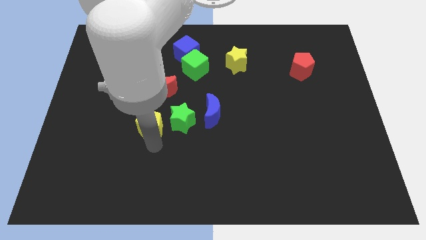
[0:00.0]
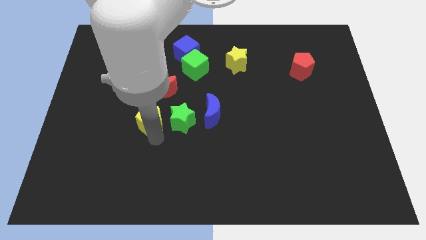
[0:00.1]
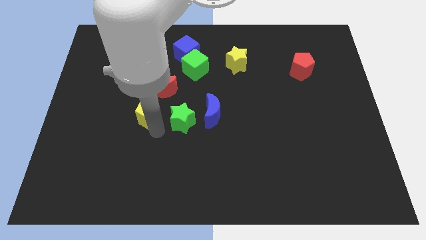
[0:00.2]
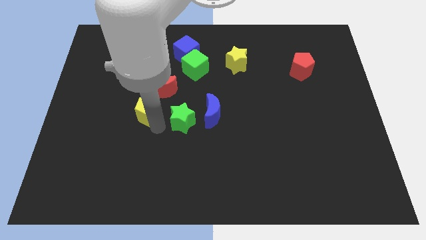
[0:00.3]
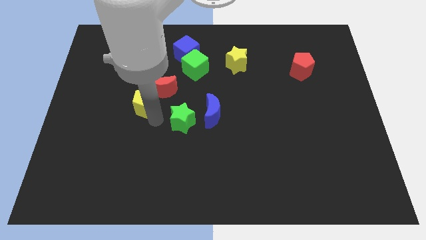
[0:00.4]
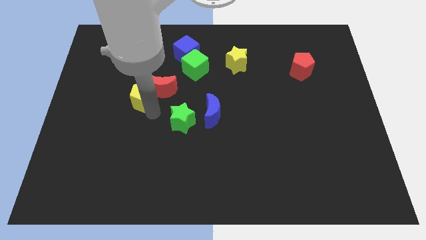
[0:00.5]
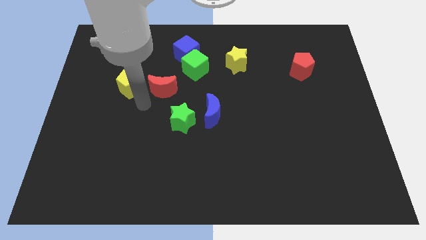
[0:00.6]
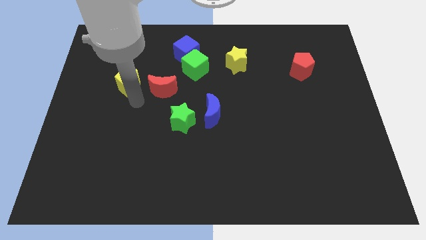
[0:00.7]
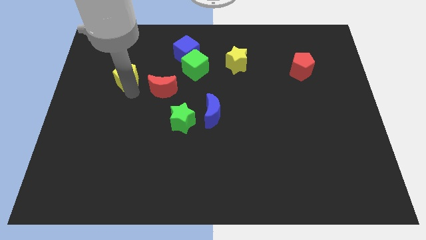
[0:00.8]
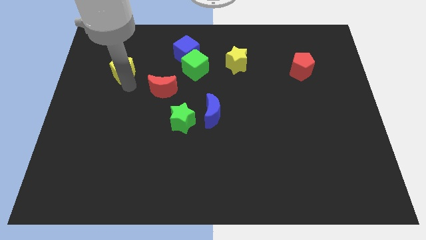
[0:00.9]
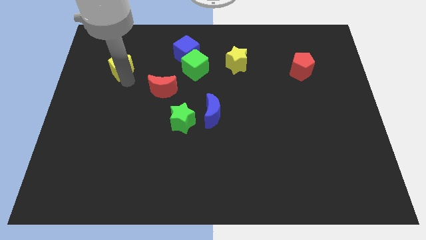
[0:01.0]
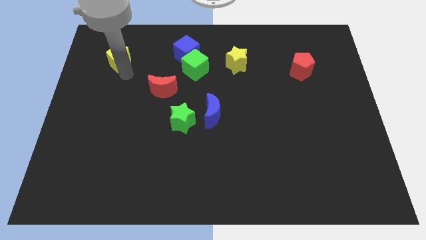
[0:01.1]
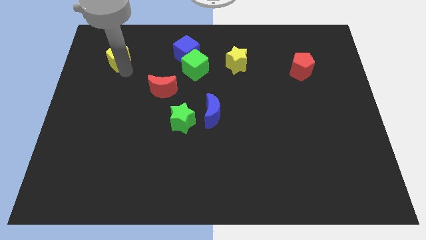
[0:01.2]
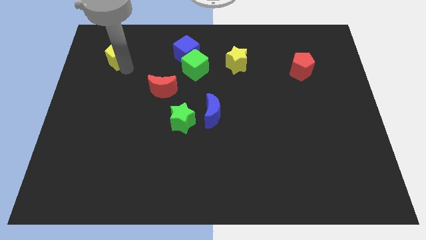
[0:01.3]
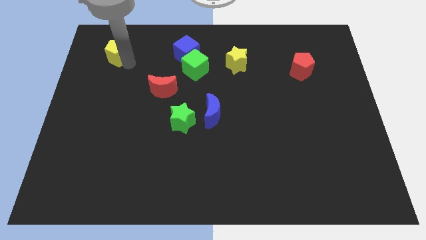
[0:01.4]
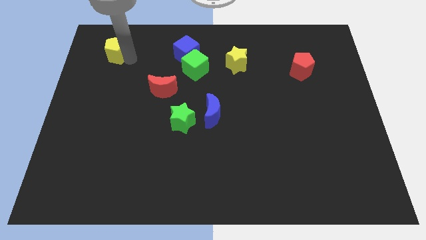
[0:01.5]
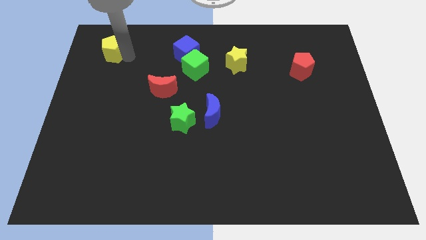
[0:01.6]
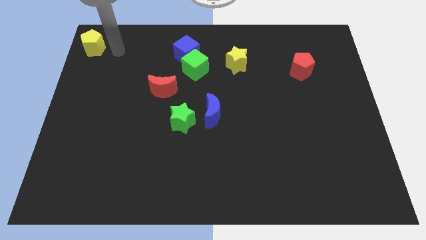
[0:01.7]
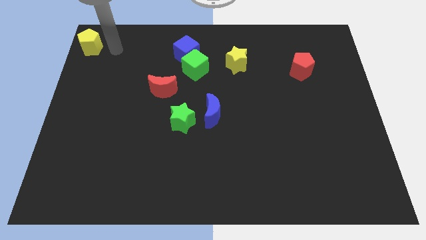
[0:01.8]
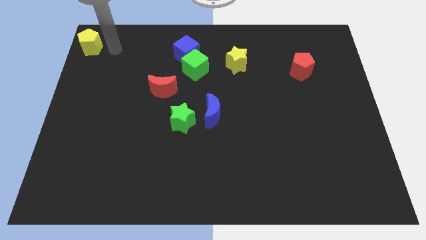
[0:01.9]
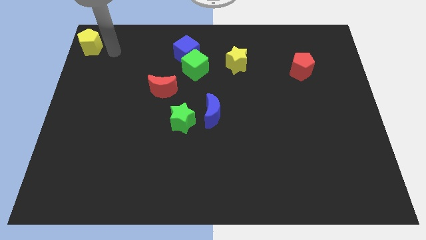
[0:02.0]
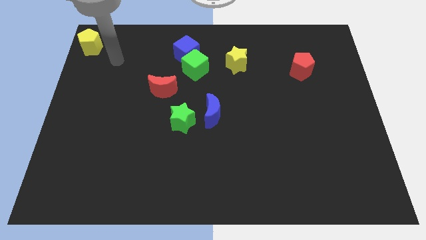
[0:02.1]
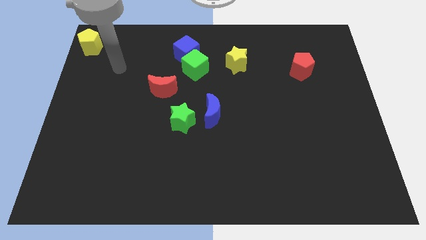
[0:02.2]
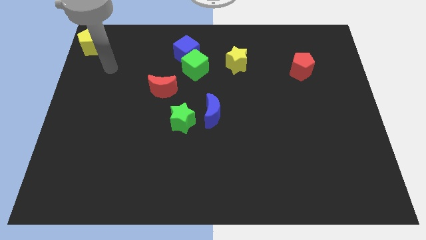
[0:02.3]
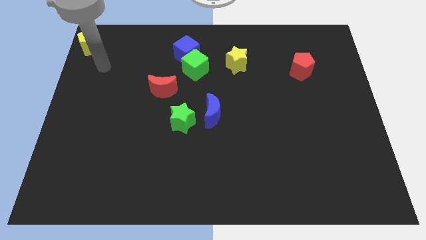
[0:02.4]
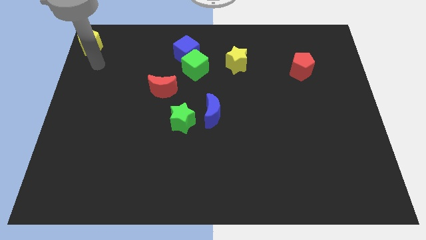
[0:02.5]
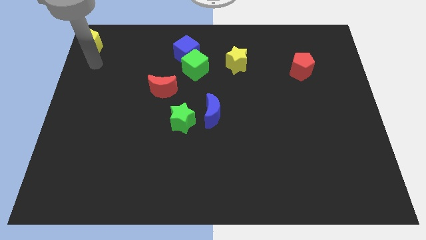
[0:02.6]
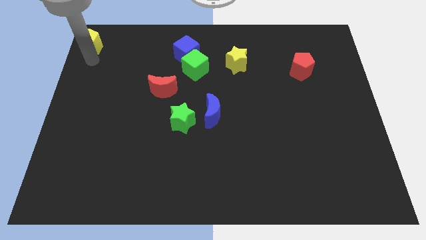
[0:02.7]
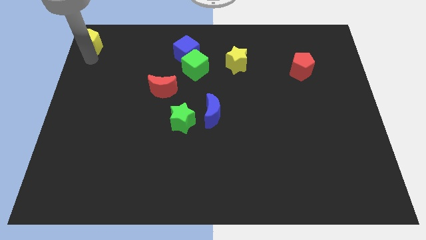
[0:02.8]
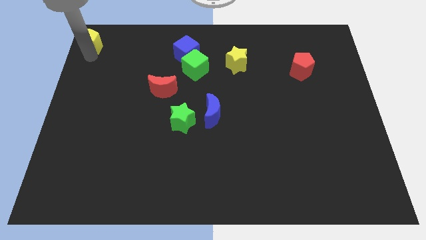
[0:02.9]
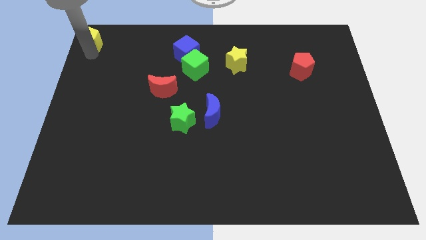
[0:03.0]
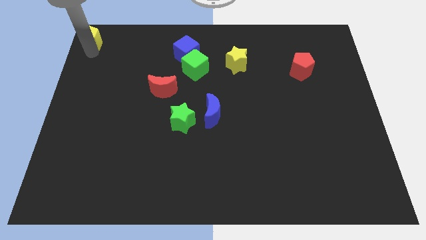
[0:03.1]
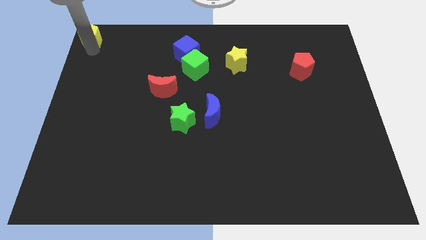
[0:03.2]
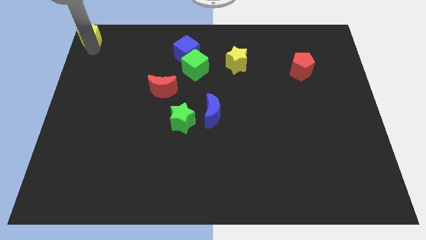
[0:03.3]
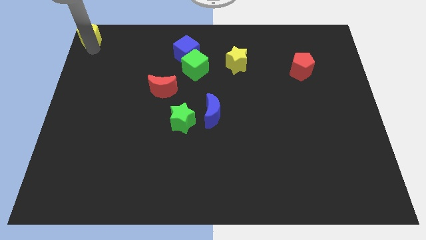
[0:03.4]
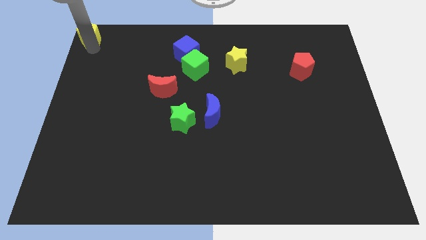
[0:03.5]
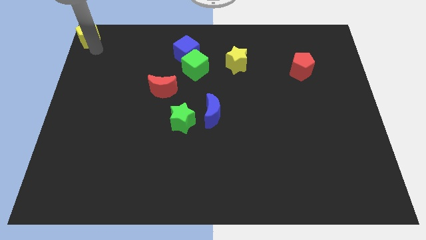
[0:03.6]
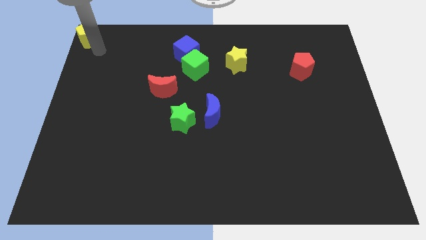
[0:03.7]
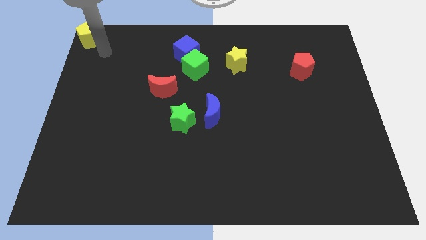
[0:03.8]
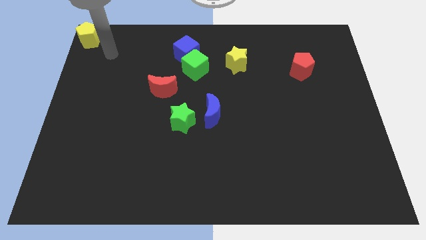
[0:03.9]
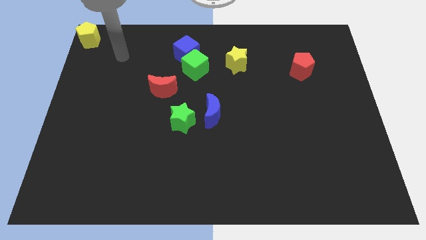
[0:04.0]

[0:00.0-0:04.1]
place yellow pentagon in the top left corner

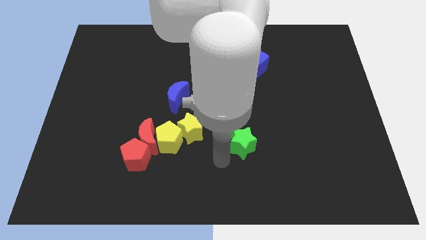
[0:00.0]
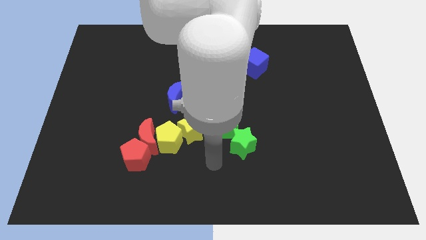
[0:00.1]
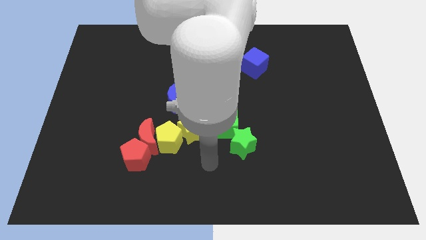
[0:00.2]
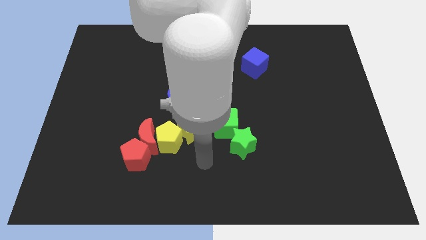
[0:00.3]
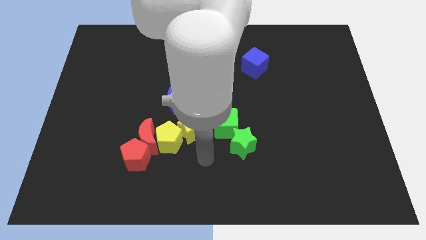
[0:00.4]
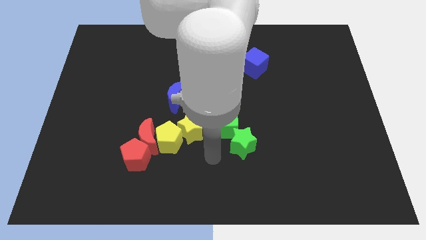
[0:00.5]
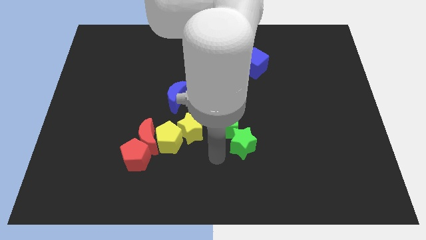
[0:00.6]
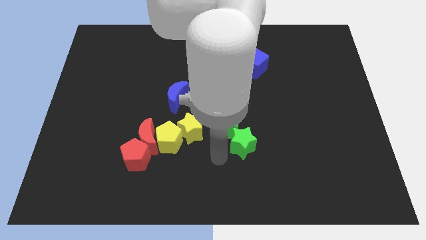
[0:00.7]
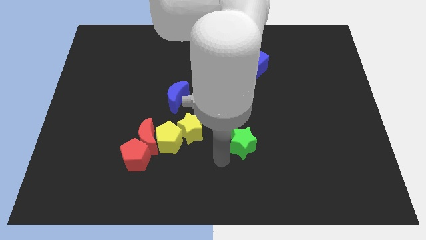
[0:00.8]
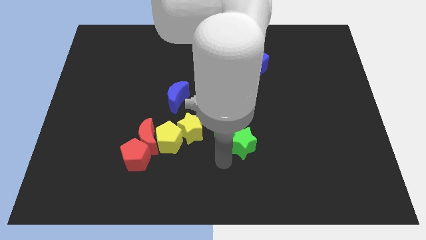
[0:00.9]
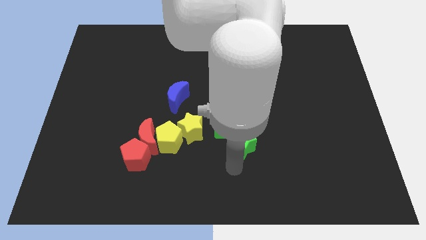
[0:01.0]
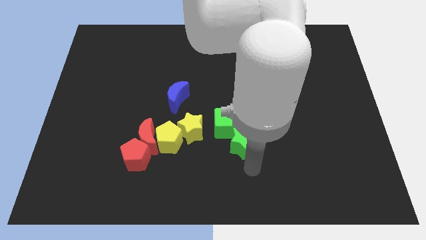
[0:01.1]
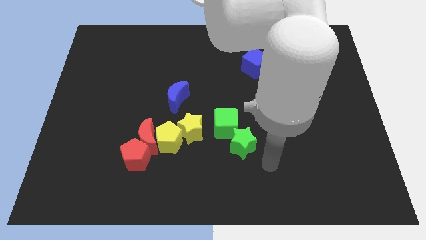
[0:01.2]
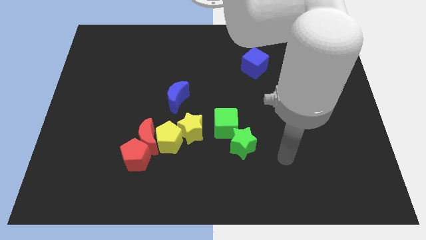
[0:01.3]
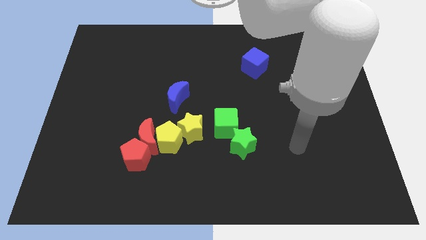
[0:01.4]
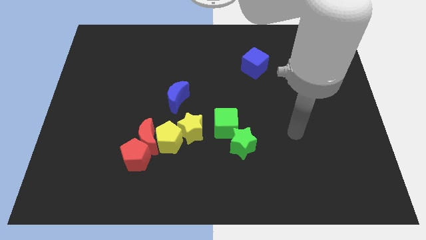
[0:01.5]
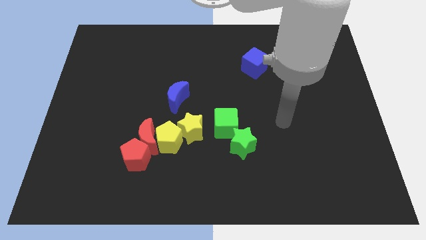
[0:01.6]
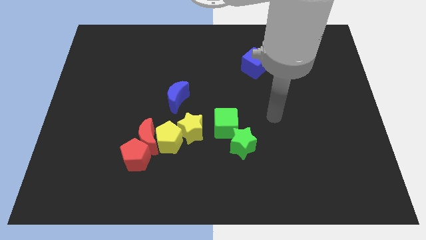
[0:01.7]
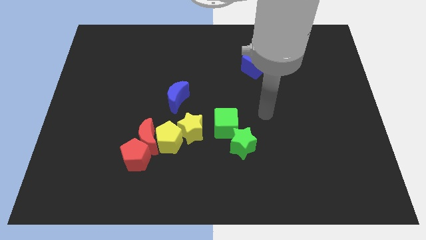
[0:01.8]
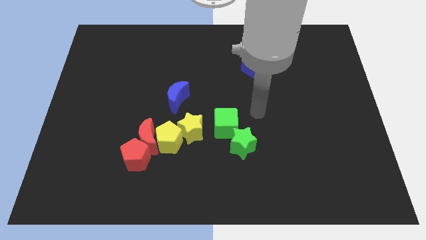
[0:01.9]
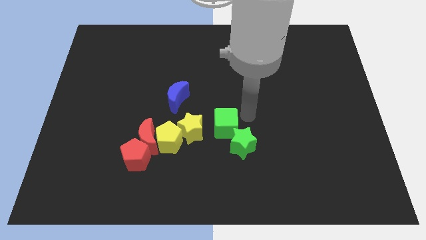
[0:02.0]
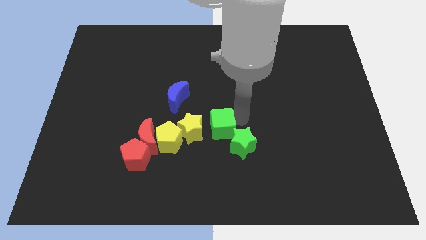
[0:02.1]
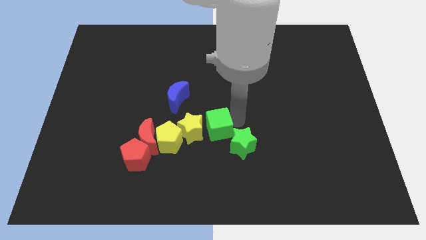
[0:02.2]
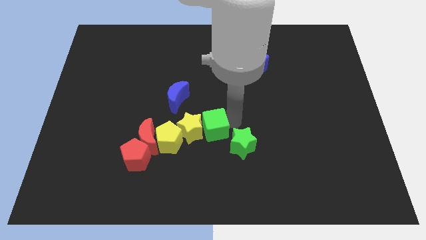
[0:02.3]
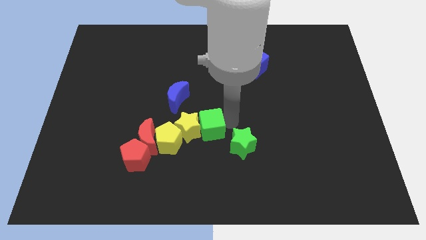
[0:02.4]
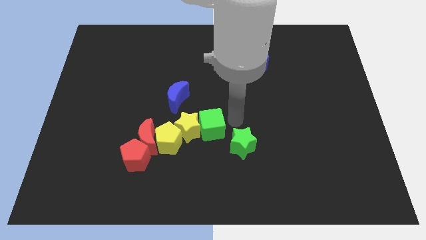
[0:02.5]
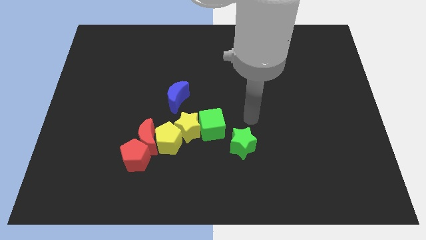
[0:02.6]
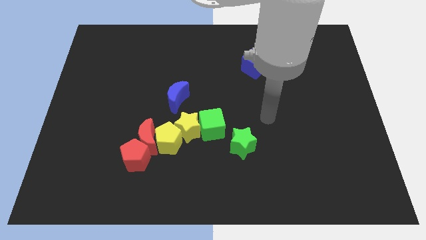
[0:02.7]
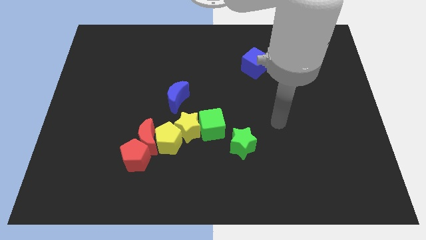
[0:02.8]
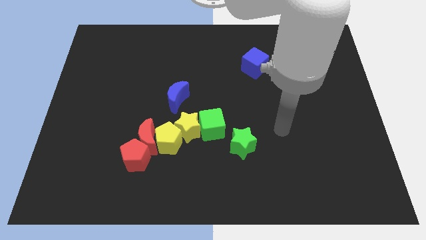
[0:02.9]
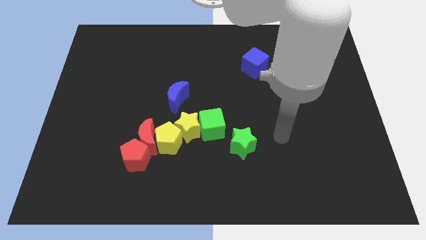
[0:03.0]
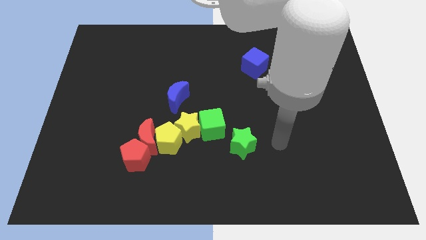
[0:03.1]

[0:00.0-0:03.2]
push green cube into yellow star

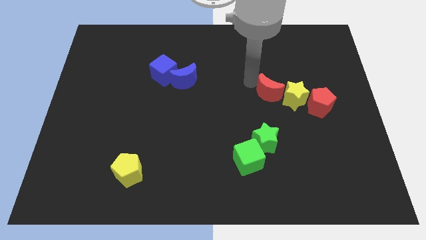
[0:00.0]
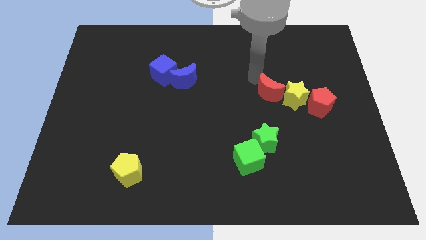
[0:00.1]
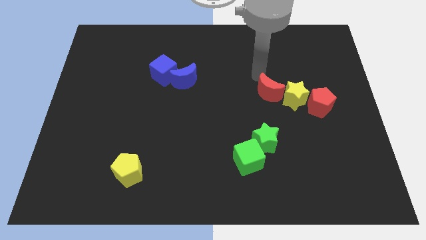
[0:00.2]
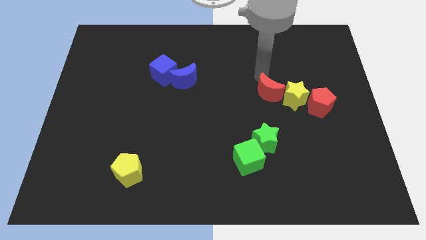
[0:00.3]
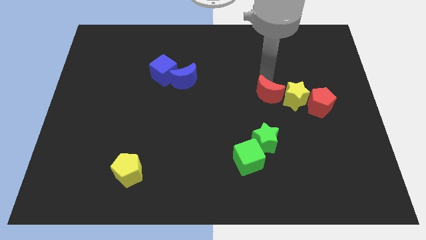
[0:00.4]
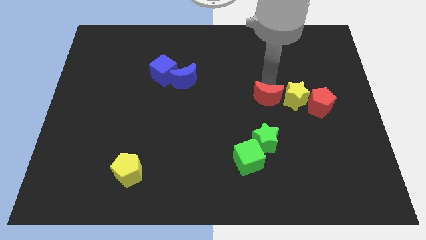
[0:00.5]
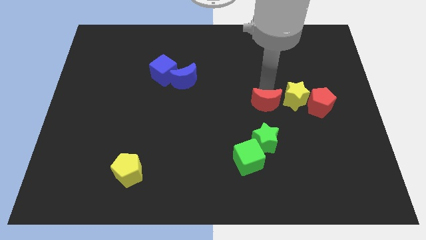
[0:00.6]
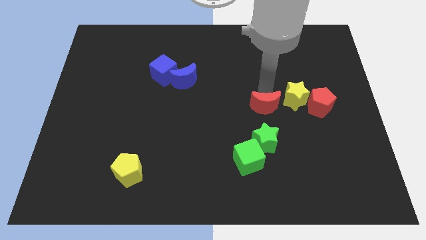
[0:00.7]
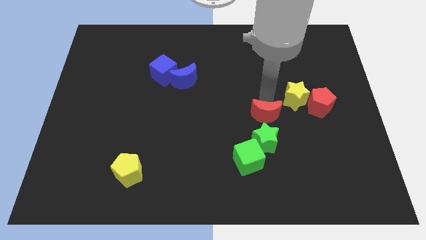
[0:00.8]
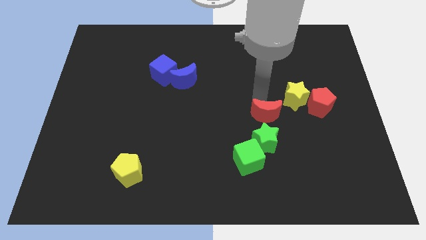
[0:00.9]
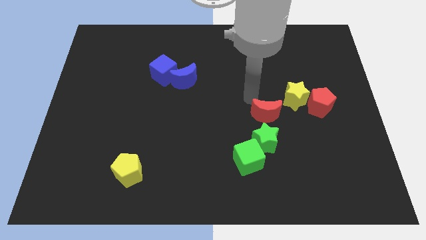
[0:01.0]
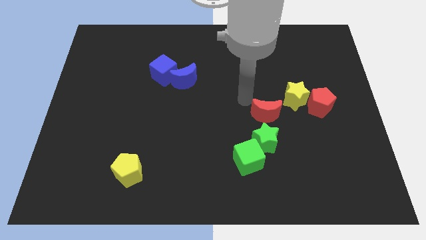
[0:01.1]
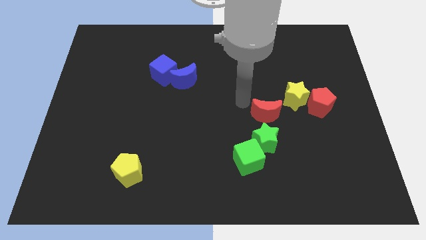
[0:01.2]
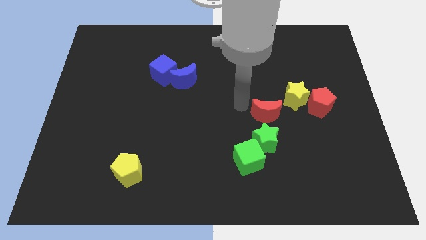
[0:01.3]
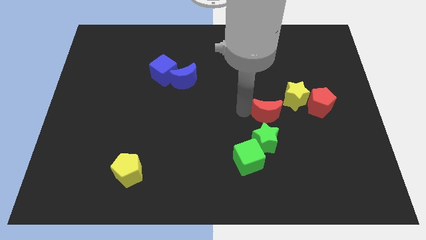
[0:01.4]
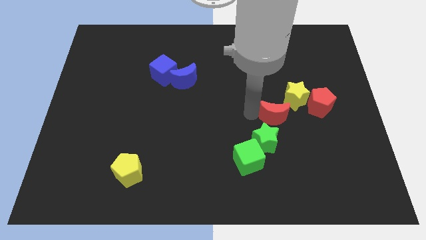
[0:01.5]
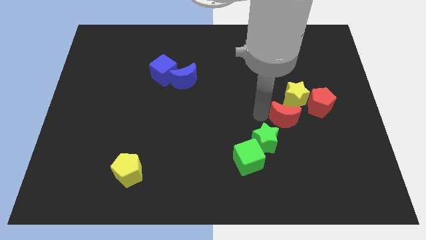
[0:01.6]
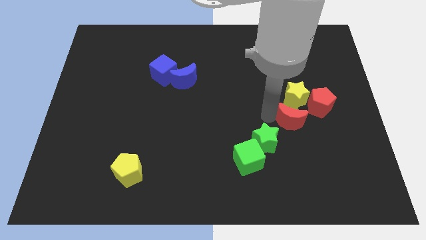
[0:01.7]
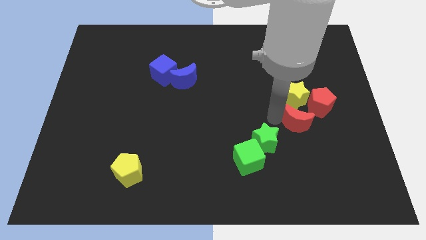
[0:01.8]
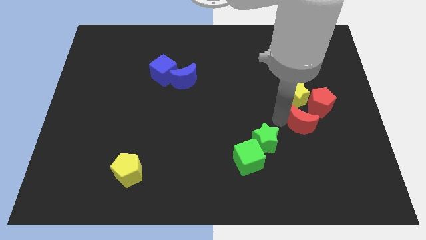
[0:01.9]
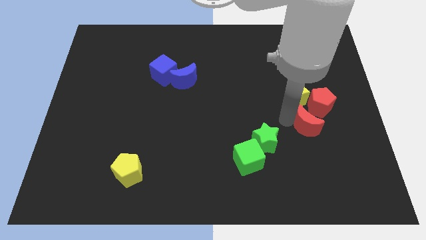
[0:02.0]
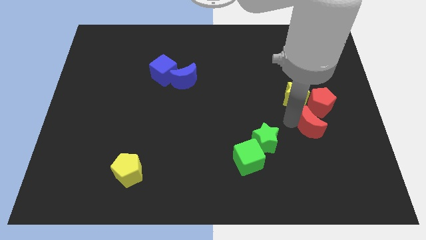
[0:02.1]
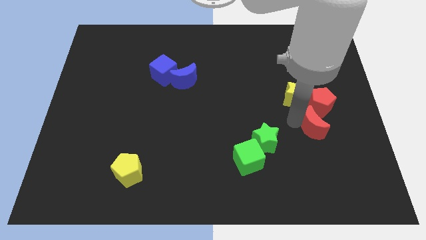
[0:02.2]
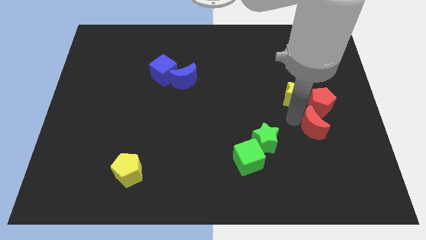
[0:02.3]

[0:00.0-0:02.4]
push the red crescent to the bottom left side of the red pentagon
